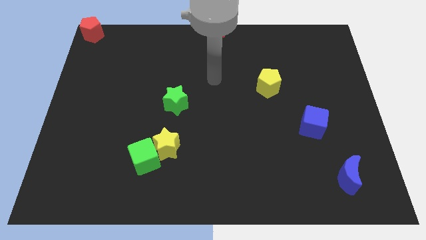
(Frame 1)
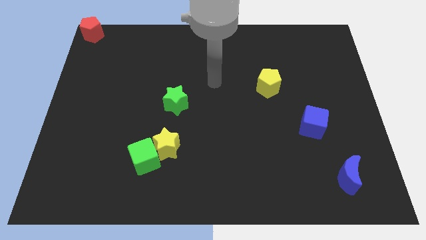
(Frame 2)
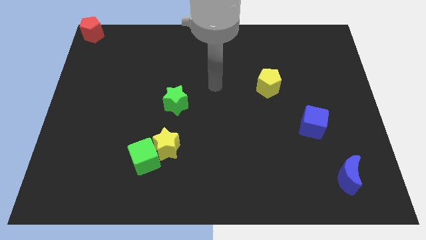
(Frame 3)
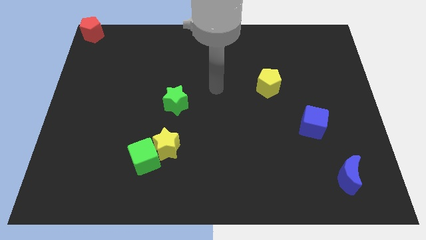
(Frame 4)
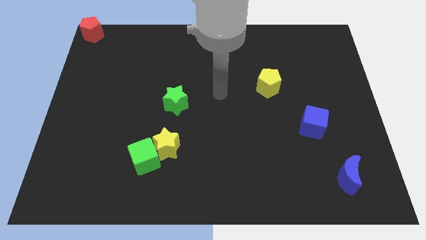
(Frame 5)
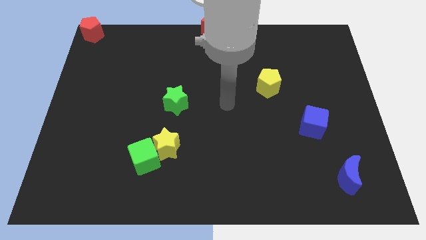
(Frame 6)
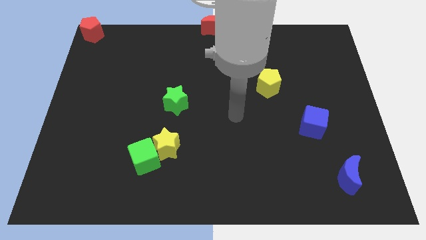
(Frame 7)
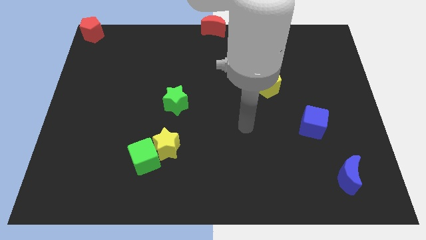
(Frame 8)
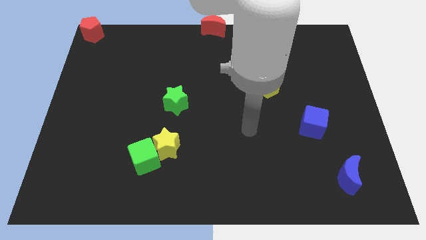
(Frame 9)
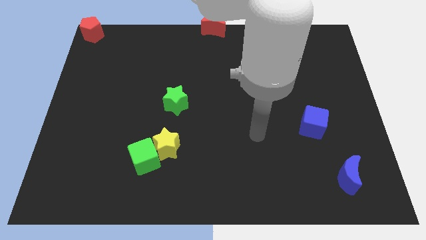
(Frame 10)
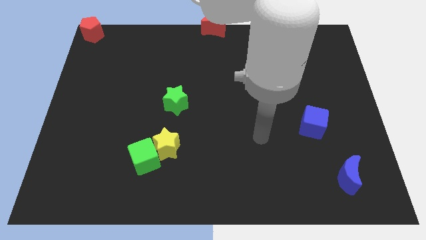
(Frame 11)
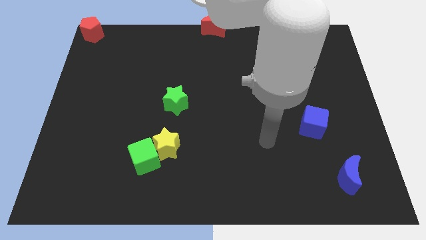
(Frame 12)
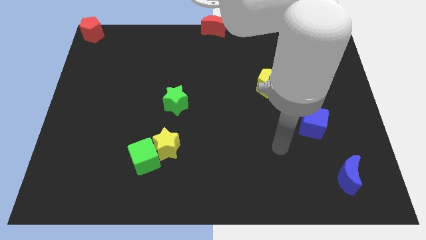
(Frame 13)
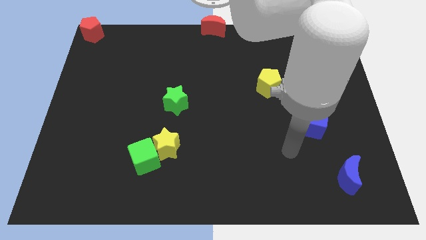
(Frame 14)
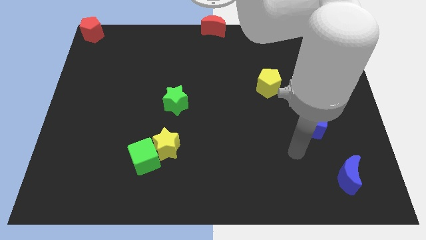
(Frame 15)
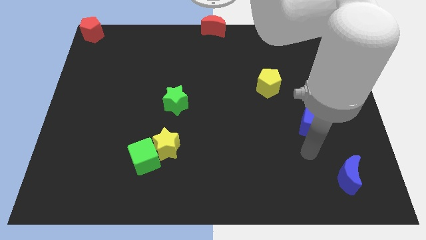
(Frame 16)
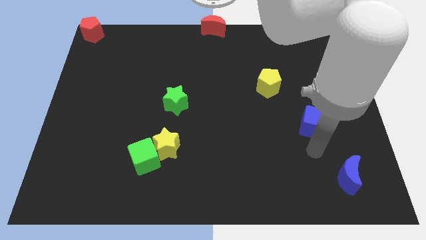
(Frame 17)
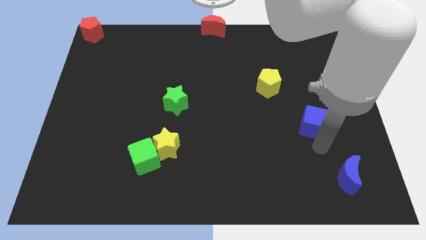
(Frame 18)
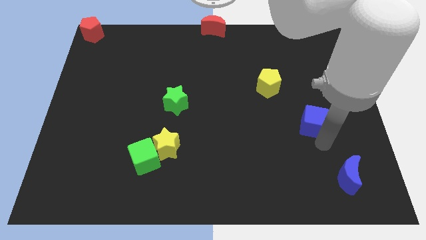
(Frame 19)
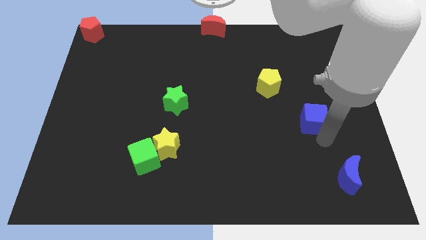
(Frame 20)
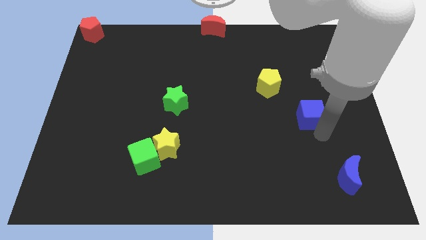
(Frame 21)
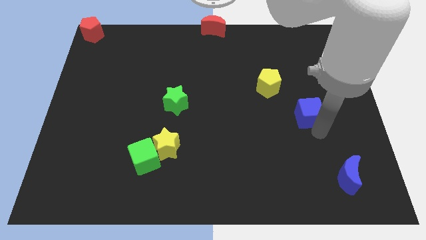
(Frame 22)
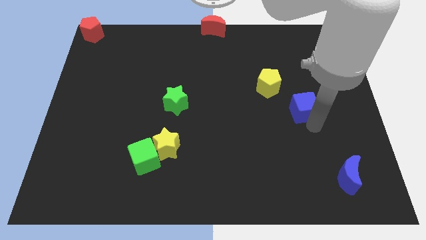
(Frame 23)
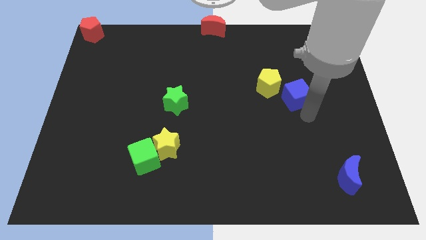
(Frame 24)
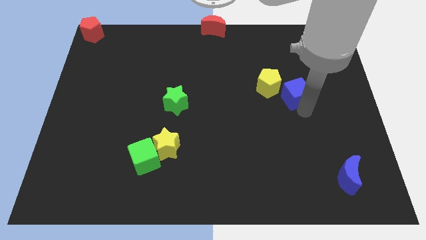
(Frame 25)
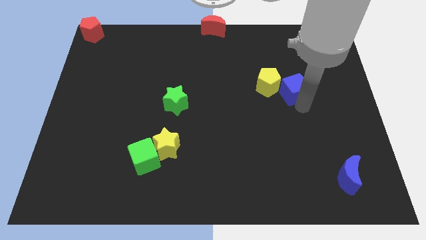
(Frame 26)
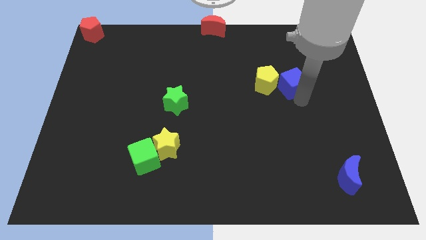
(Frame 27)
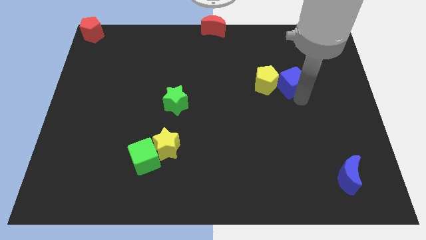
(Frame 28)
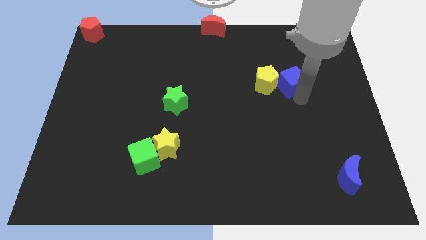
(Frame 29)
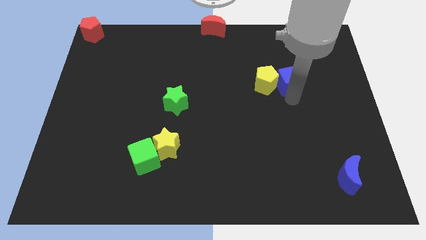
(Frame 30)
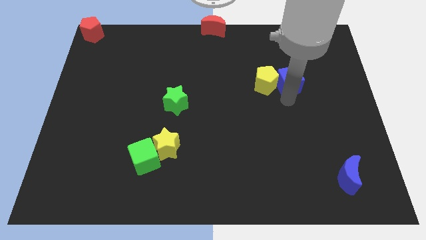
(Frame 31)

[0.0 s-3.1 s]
place blue cube into yellow pentagon

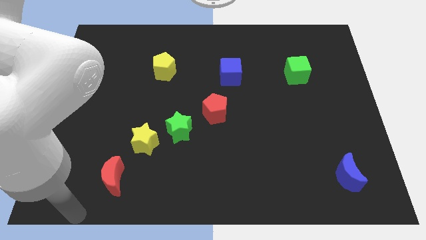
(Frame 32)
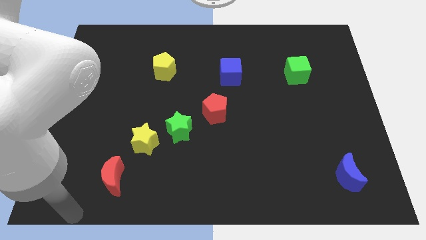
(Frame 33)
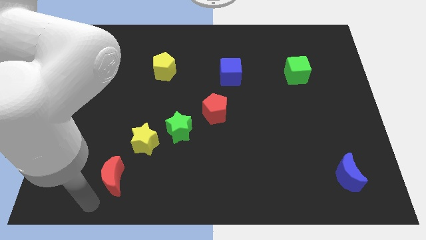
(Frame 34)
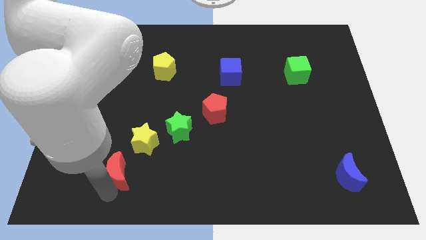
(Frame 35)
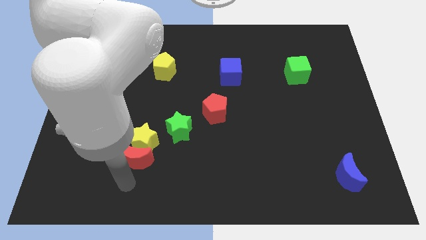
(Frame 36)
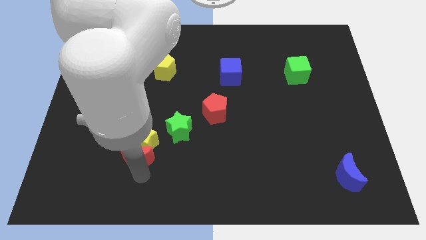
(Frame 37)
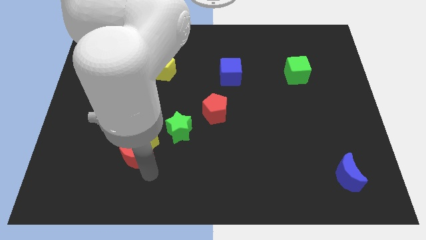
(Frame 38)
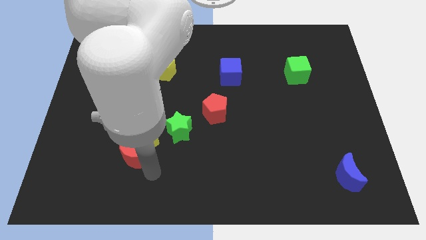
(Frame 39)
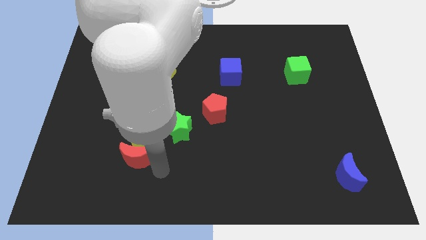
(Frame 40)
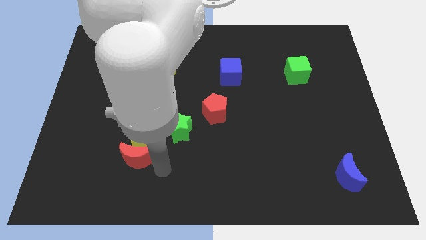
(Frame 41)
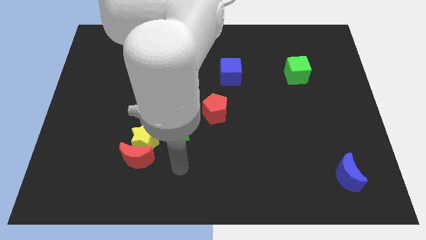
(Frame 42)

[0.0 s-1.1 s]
push the red crescent into the yellow star

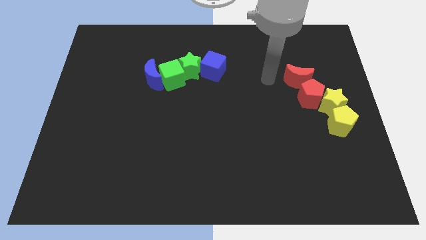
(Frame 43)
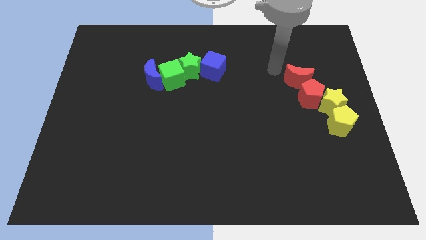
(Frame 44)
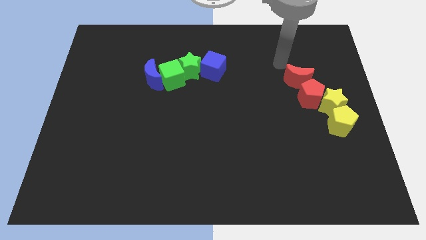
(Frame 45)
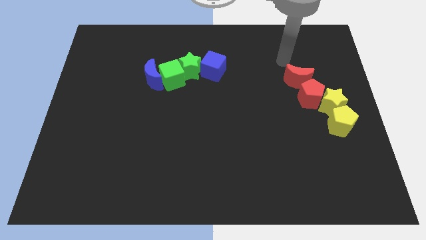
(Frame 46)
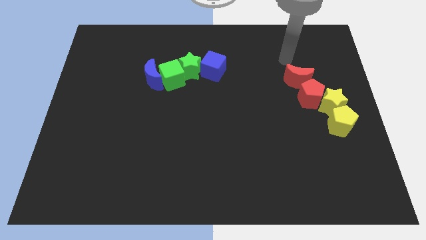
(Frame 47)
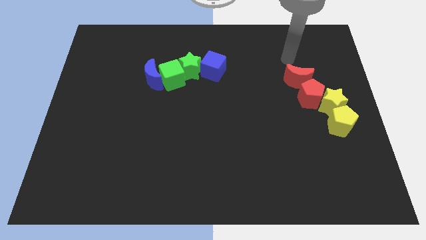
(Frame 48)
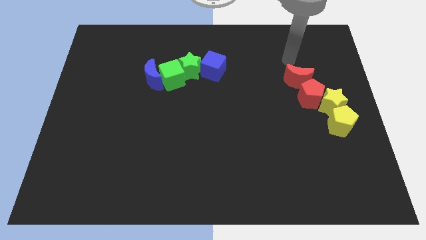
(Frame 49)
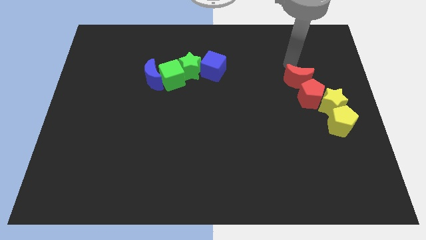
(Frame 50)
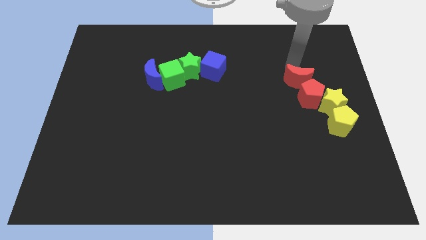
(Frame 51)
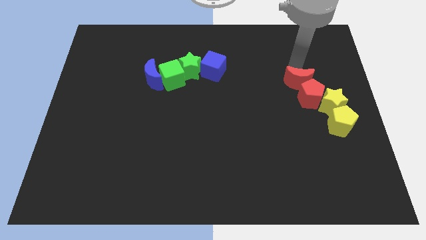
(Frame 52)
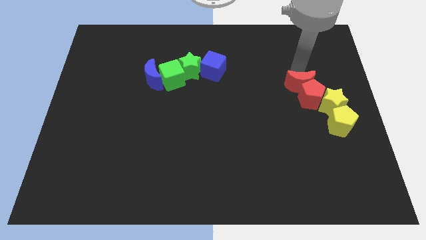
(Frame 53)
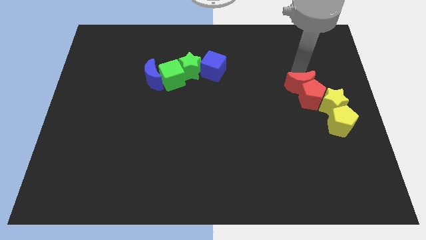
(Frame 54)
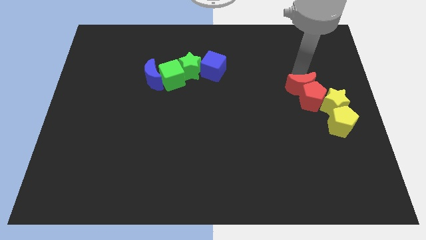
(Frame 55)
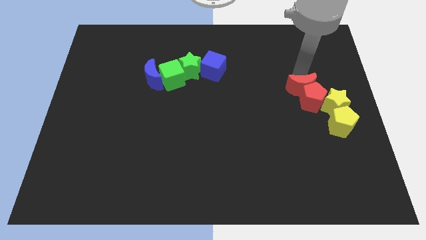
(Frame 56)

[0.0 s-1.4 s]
push the red moon into the red pentagon

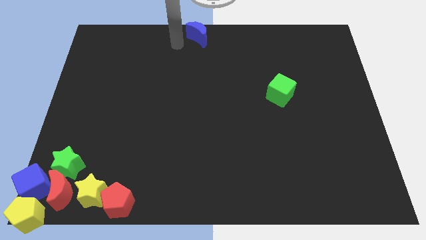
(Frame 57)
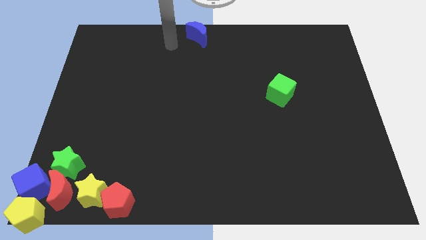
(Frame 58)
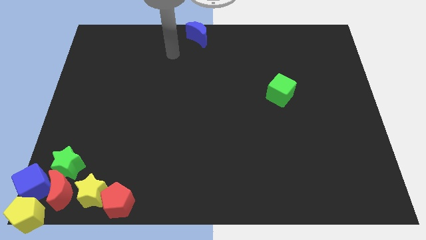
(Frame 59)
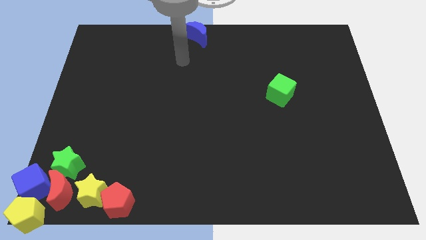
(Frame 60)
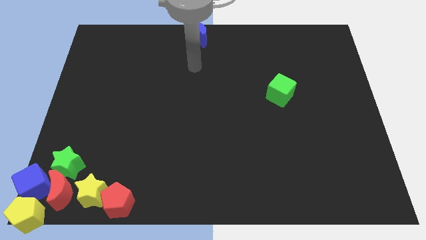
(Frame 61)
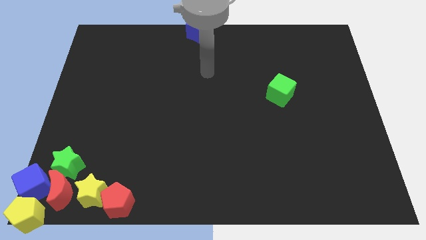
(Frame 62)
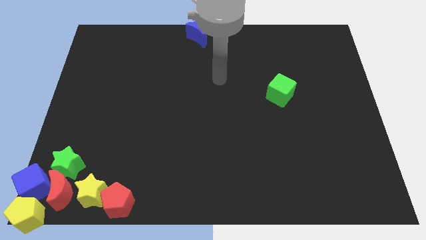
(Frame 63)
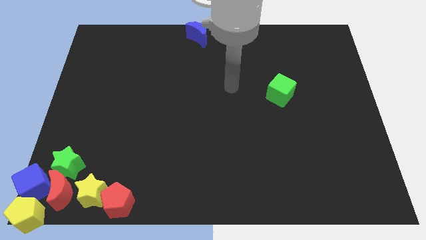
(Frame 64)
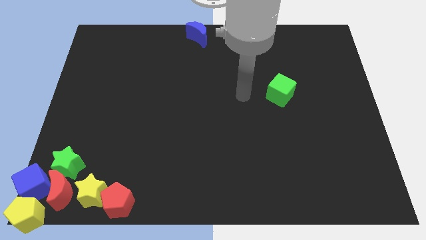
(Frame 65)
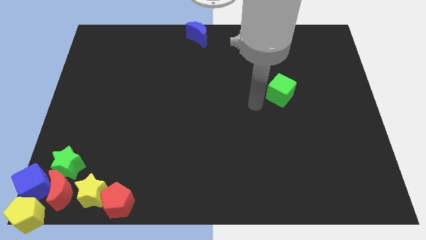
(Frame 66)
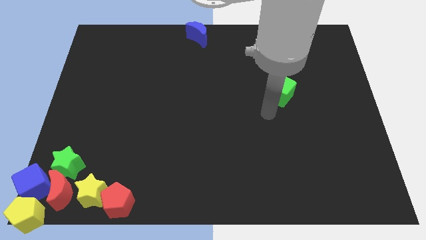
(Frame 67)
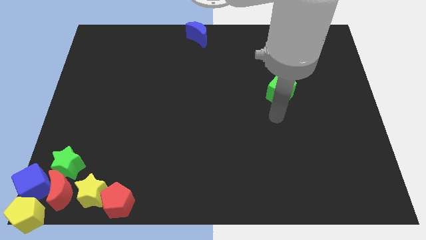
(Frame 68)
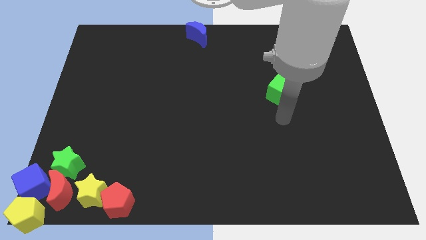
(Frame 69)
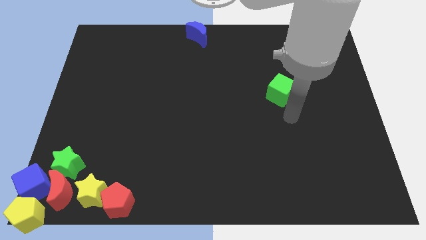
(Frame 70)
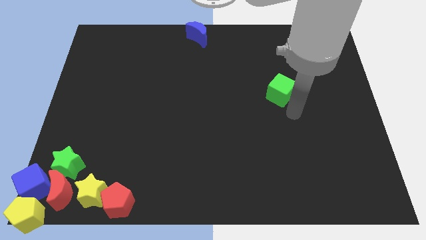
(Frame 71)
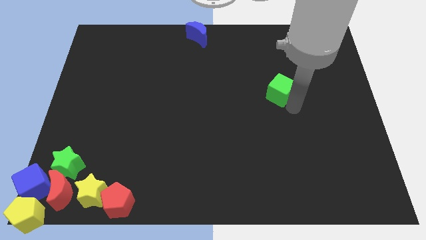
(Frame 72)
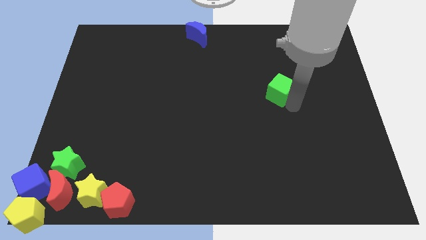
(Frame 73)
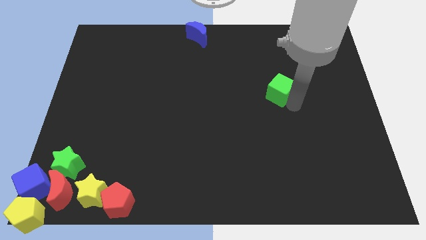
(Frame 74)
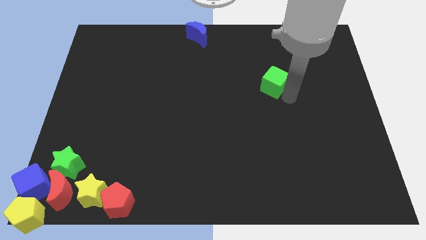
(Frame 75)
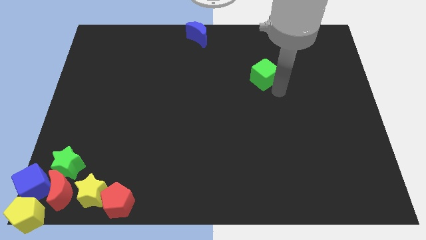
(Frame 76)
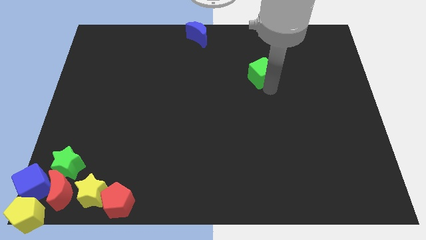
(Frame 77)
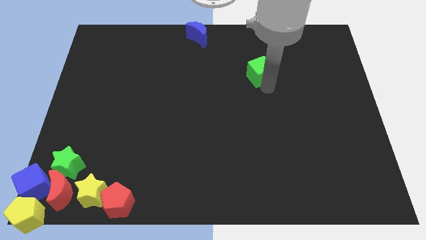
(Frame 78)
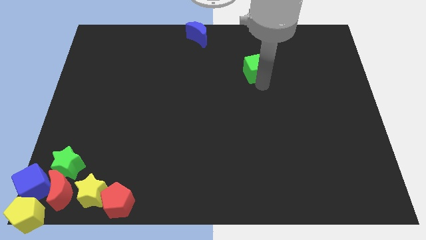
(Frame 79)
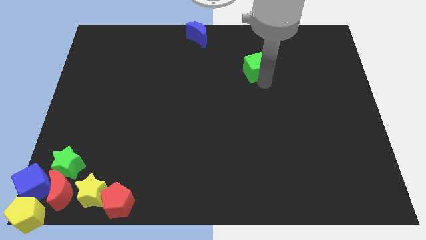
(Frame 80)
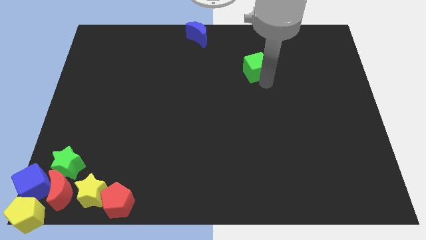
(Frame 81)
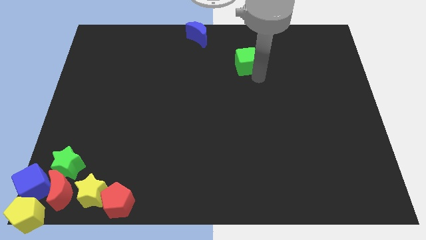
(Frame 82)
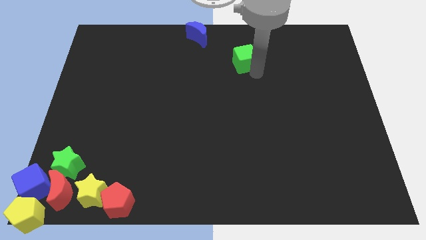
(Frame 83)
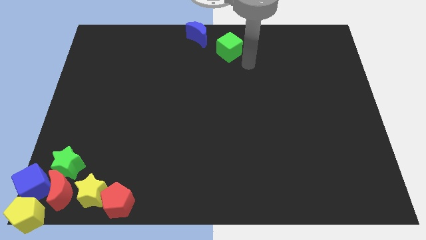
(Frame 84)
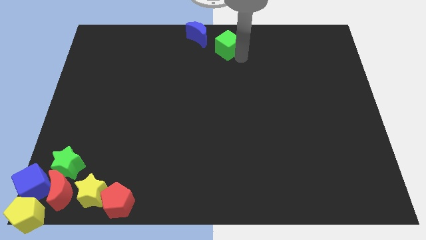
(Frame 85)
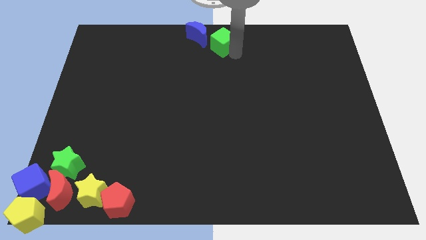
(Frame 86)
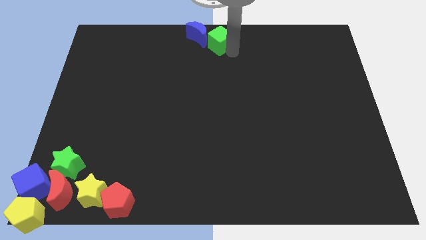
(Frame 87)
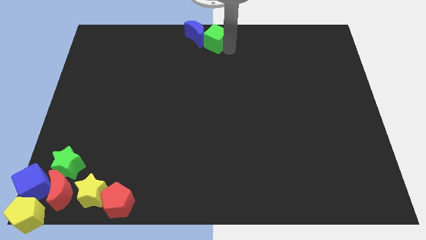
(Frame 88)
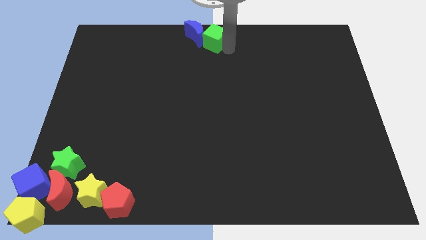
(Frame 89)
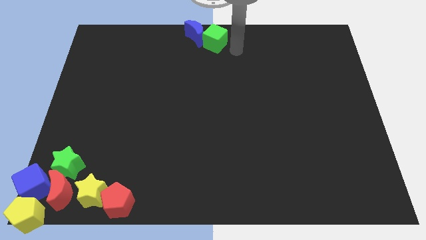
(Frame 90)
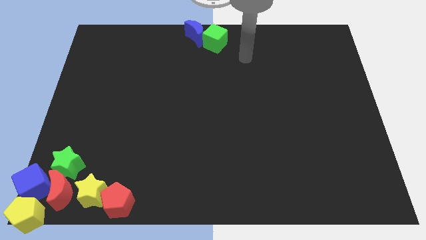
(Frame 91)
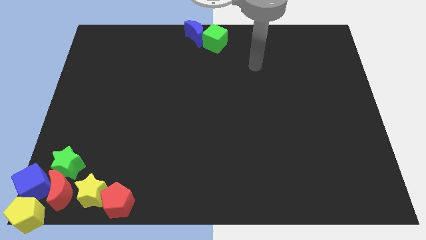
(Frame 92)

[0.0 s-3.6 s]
move the green cube into the blue moon to the top center
